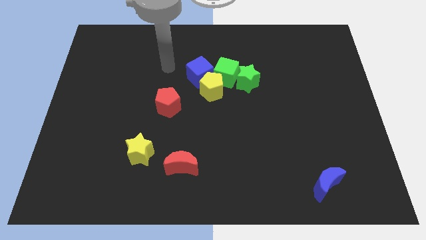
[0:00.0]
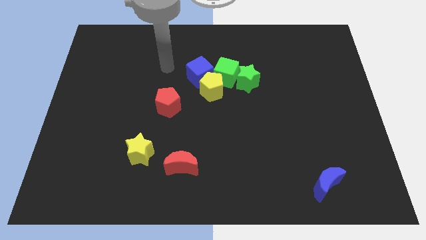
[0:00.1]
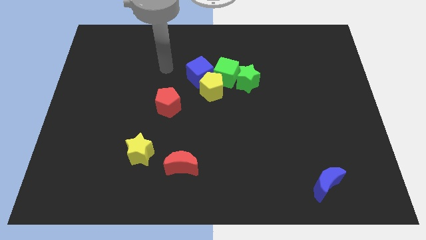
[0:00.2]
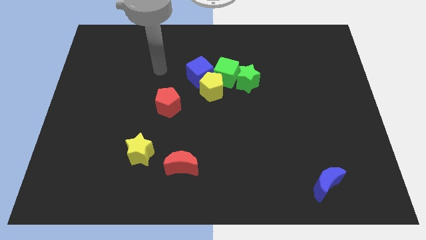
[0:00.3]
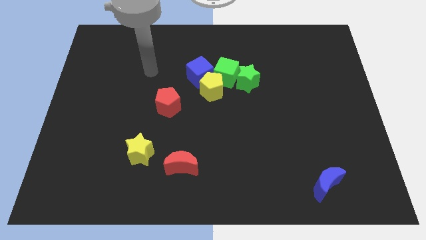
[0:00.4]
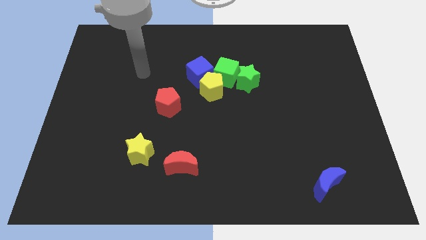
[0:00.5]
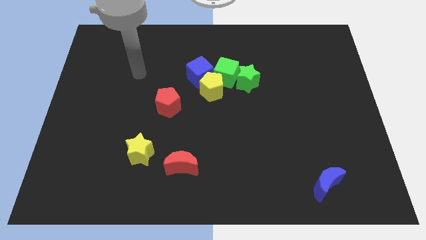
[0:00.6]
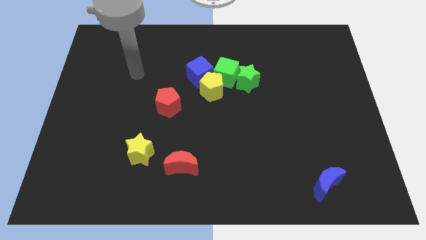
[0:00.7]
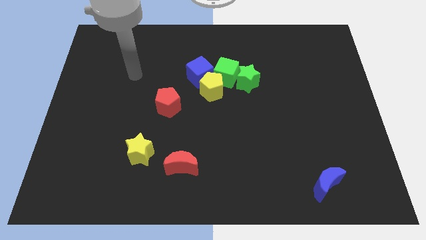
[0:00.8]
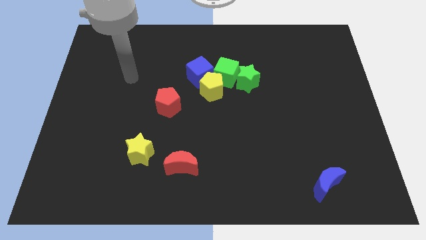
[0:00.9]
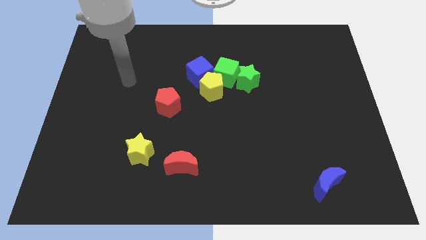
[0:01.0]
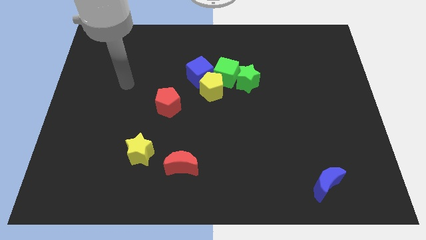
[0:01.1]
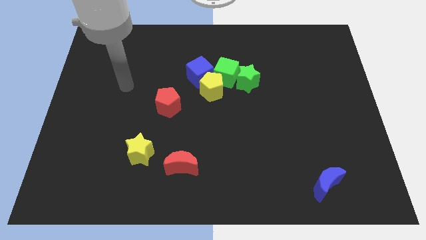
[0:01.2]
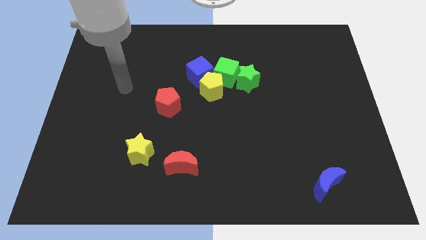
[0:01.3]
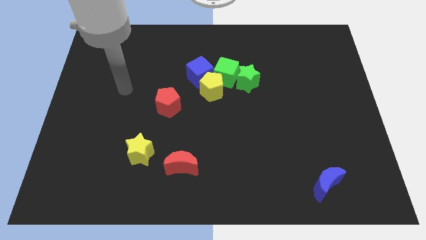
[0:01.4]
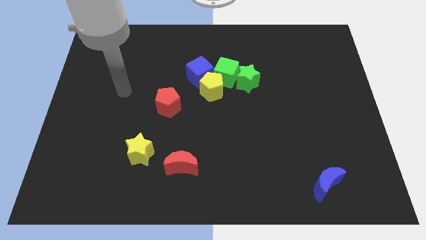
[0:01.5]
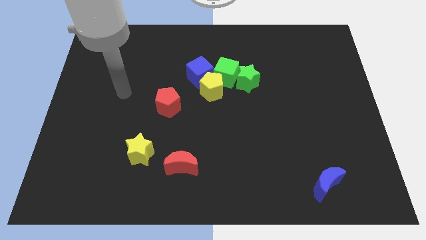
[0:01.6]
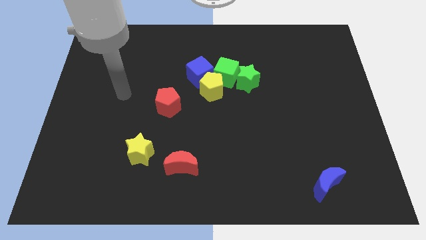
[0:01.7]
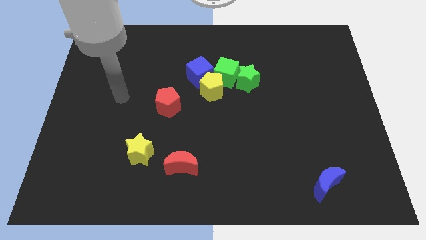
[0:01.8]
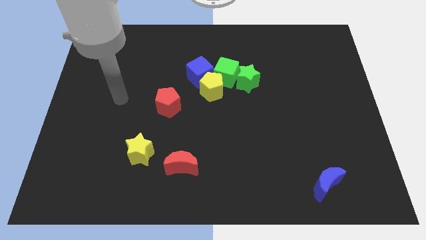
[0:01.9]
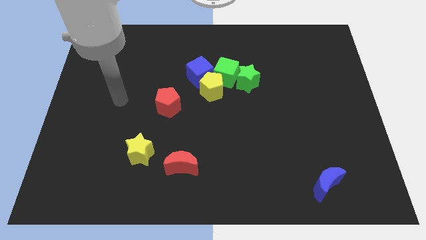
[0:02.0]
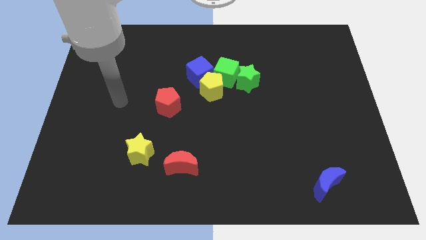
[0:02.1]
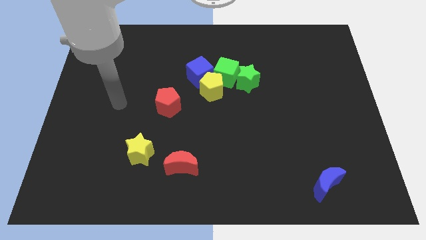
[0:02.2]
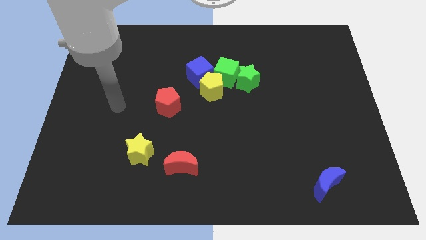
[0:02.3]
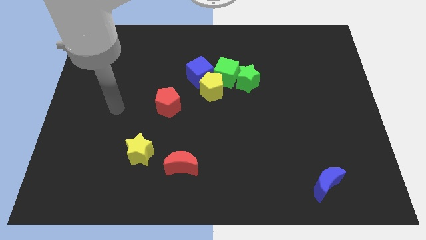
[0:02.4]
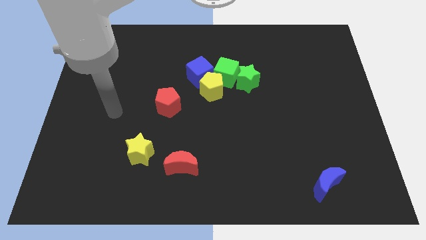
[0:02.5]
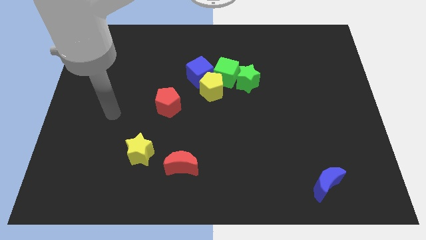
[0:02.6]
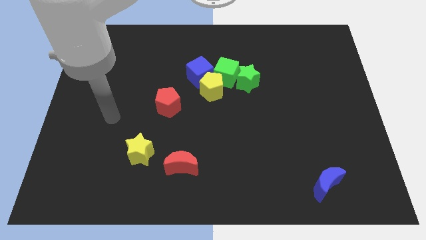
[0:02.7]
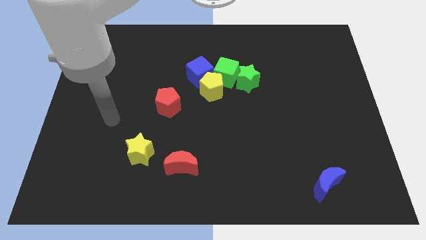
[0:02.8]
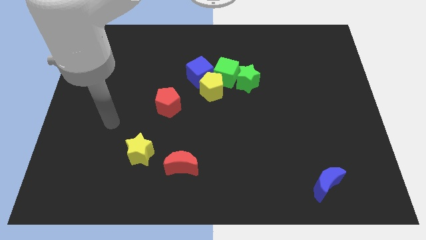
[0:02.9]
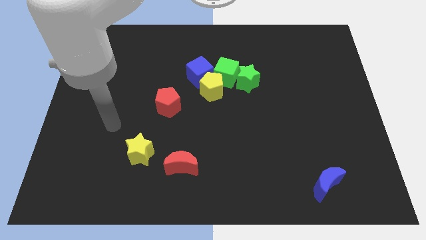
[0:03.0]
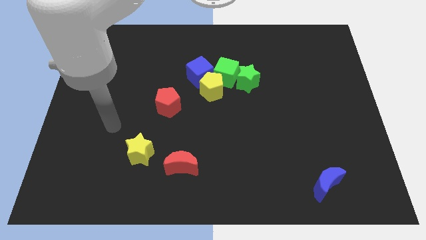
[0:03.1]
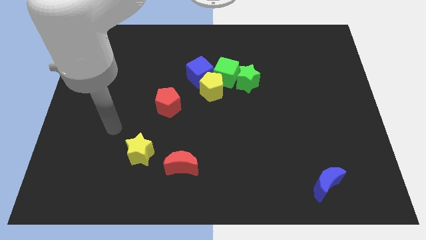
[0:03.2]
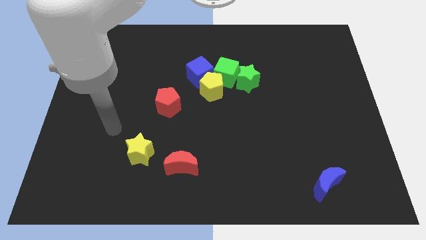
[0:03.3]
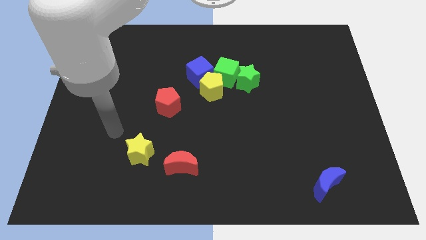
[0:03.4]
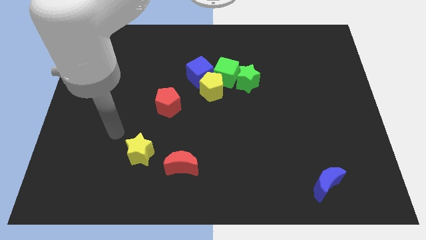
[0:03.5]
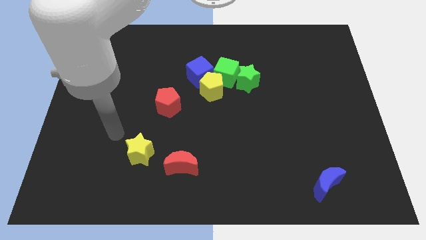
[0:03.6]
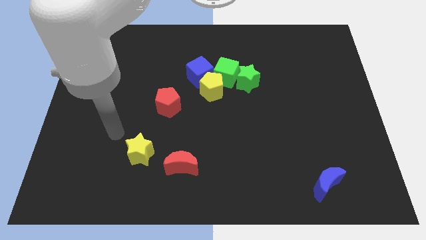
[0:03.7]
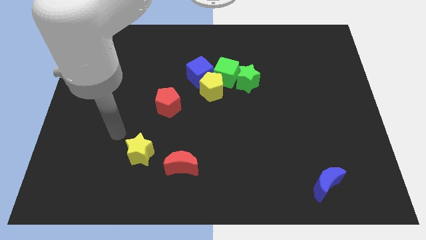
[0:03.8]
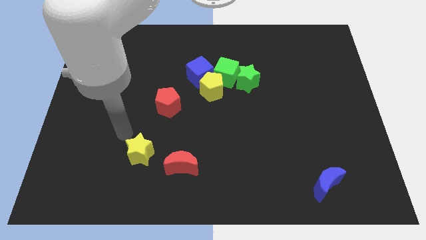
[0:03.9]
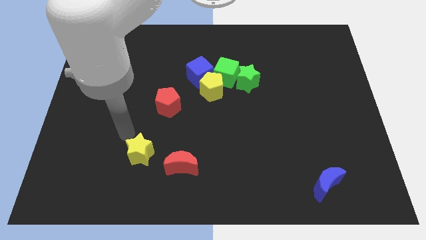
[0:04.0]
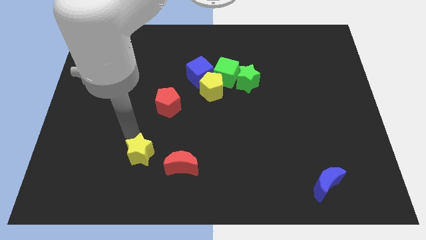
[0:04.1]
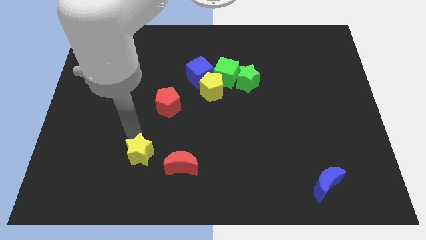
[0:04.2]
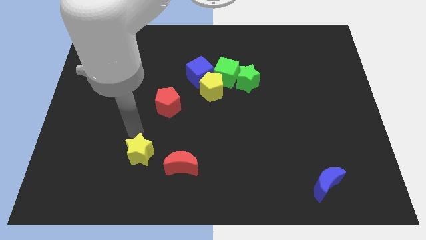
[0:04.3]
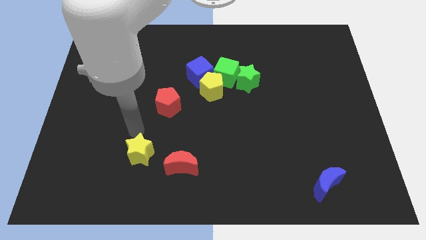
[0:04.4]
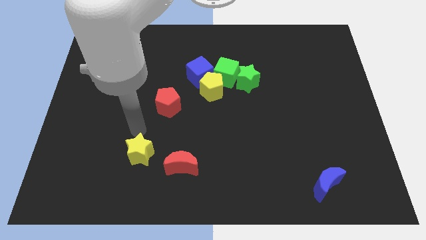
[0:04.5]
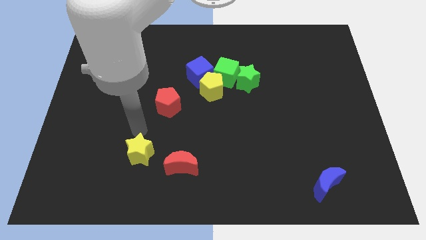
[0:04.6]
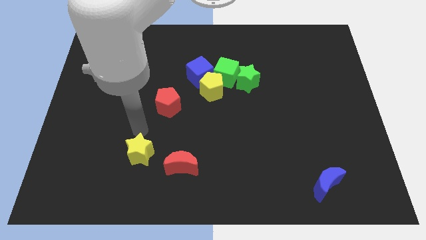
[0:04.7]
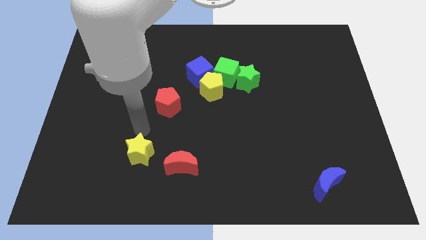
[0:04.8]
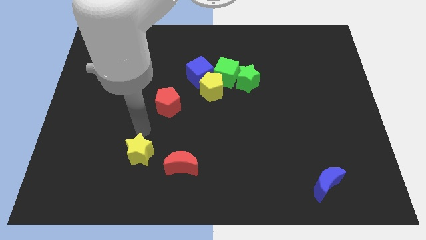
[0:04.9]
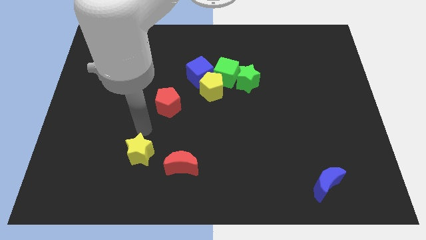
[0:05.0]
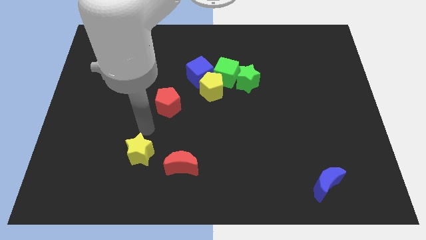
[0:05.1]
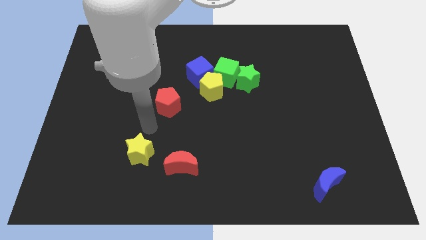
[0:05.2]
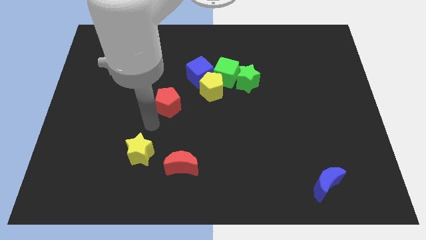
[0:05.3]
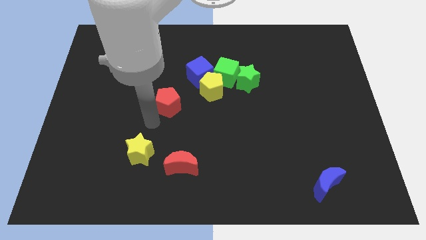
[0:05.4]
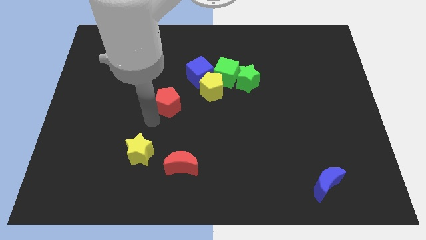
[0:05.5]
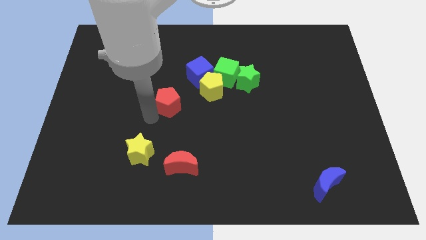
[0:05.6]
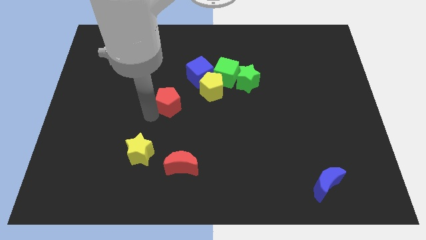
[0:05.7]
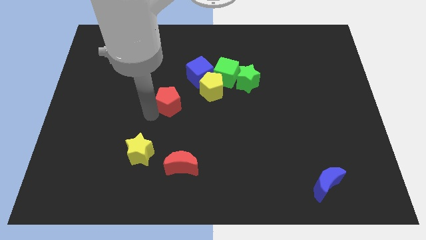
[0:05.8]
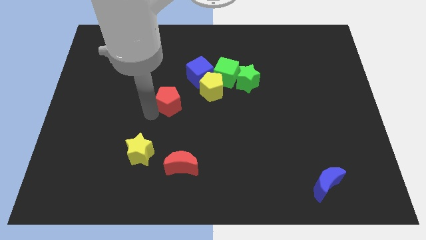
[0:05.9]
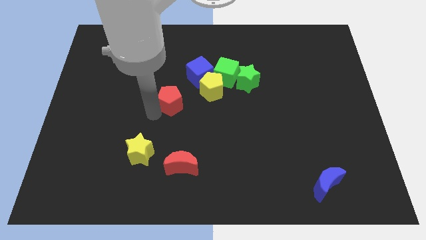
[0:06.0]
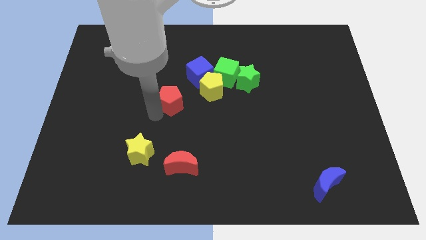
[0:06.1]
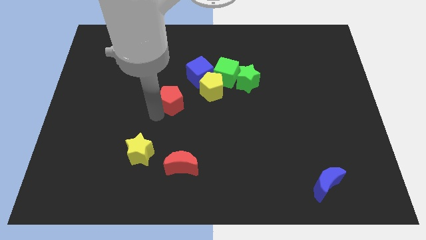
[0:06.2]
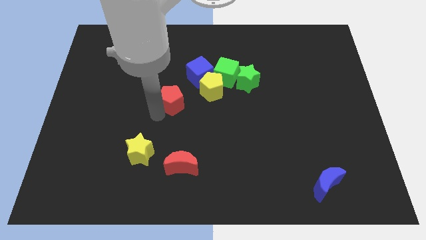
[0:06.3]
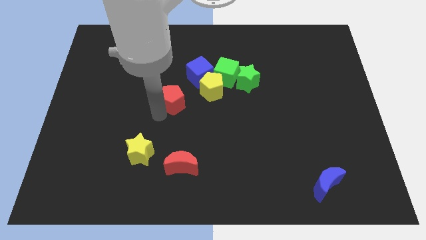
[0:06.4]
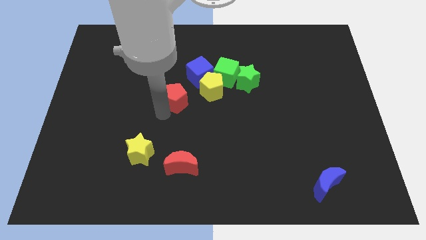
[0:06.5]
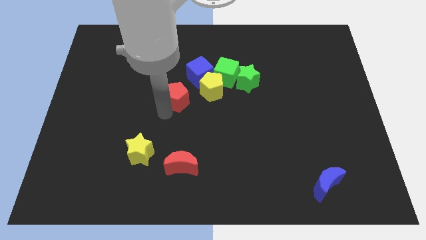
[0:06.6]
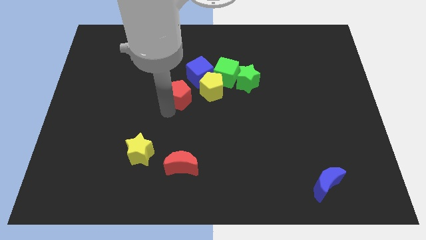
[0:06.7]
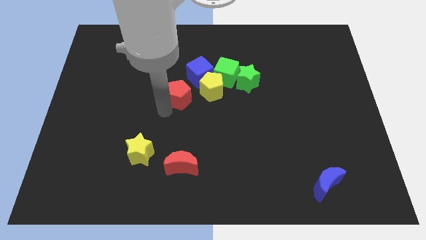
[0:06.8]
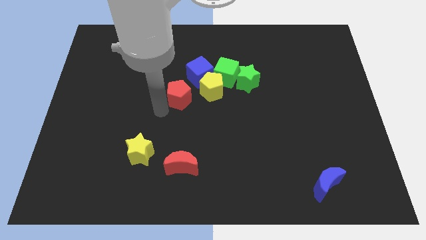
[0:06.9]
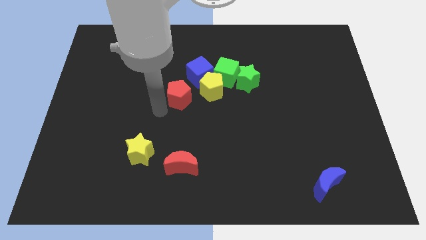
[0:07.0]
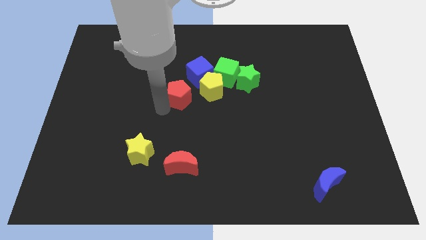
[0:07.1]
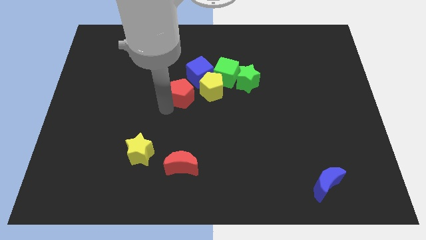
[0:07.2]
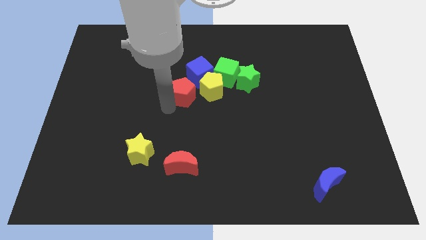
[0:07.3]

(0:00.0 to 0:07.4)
move the red pentagon to the left of the yellow pentagon

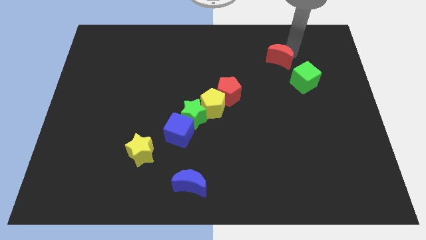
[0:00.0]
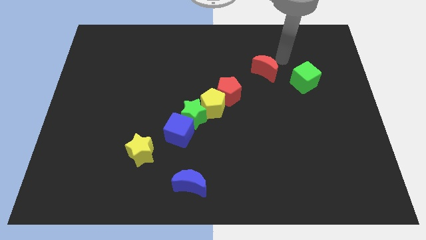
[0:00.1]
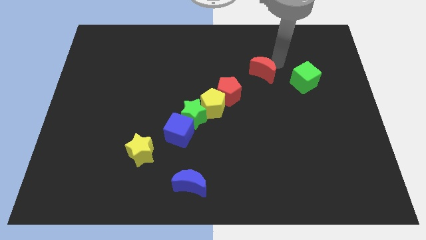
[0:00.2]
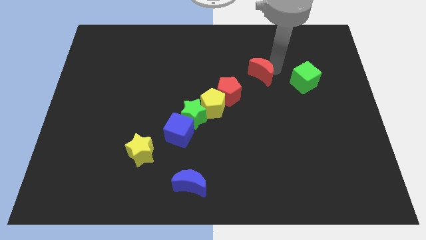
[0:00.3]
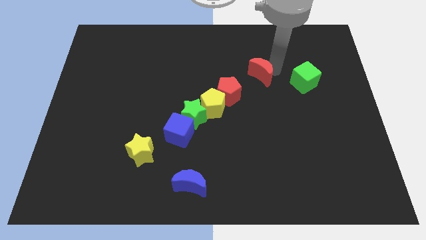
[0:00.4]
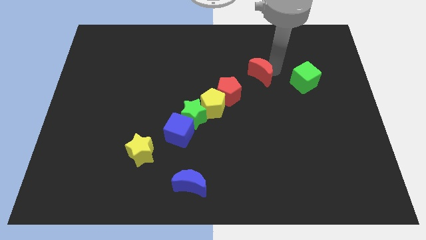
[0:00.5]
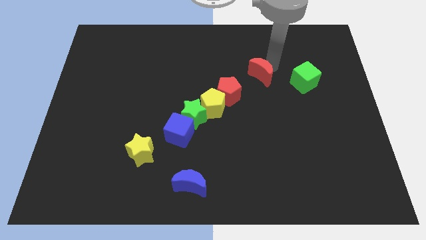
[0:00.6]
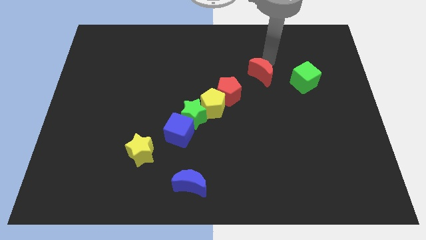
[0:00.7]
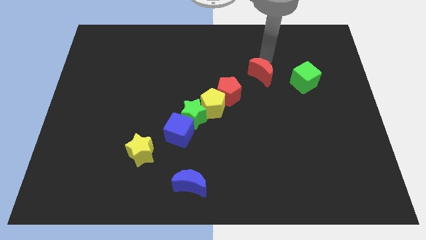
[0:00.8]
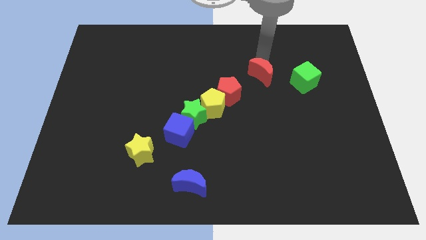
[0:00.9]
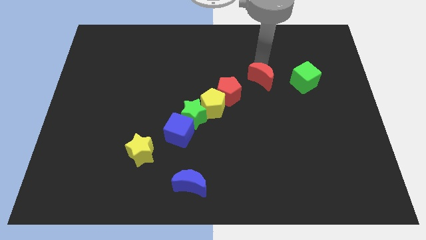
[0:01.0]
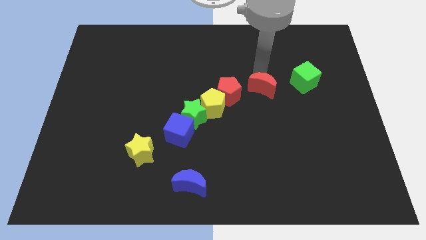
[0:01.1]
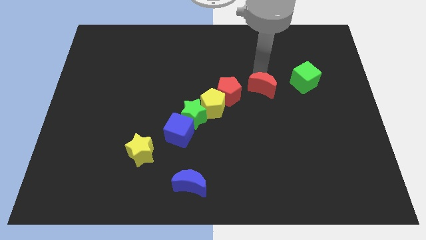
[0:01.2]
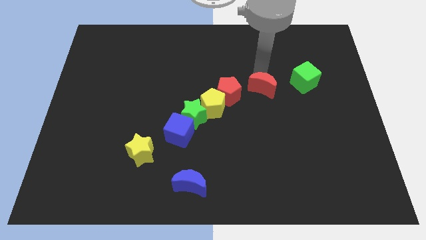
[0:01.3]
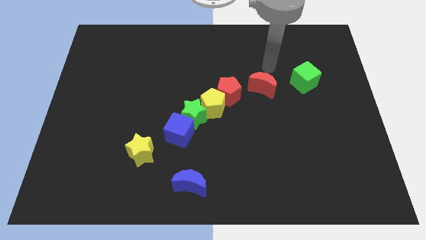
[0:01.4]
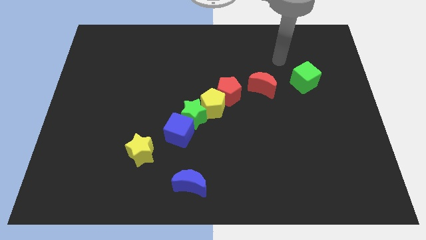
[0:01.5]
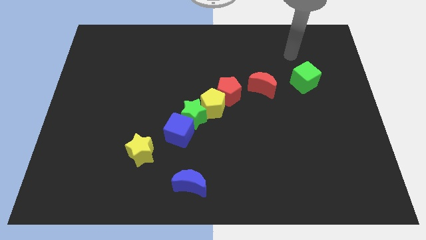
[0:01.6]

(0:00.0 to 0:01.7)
move the red crescent right to the red pentagon
